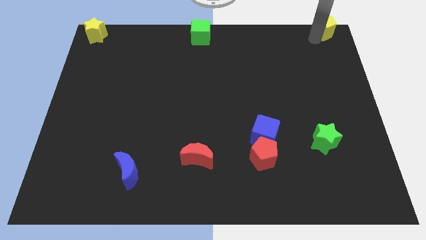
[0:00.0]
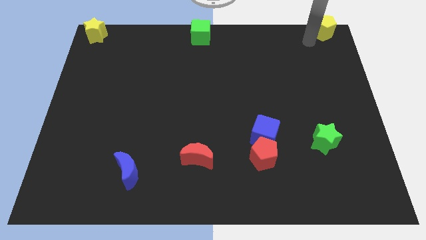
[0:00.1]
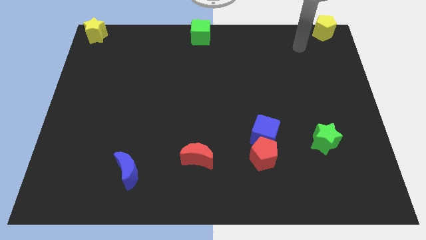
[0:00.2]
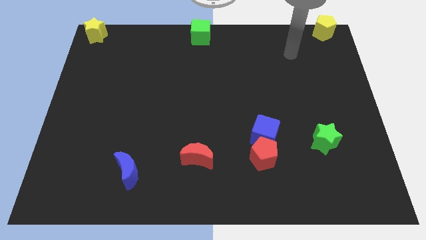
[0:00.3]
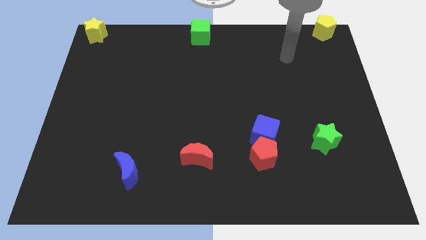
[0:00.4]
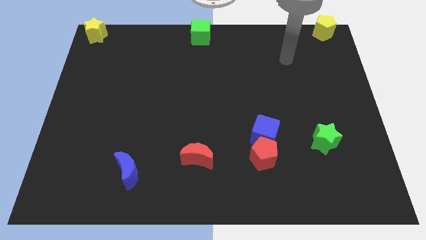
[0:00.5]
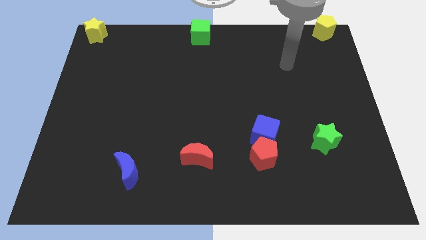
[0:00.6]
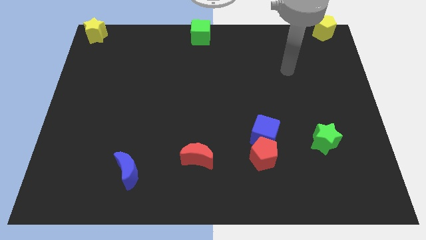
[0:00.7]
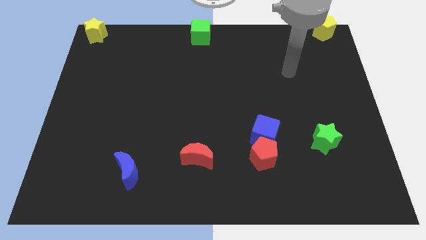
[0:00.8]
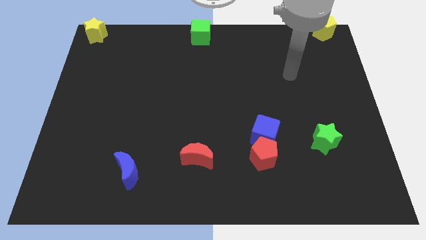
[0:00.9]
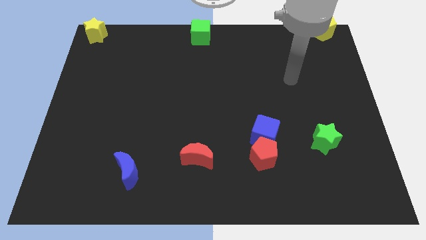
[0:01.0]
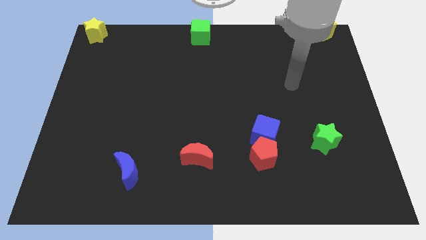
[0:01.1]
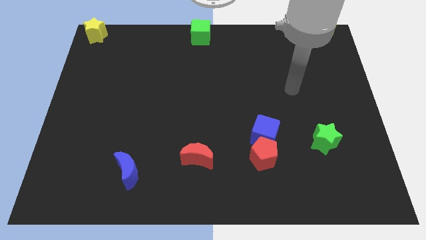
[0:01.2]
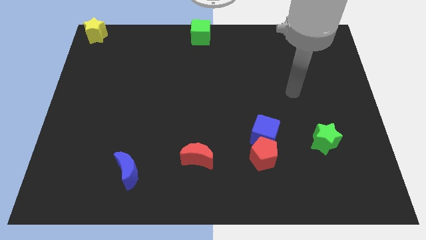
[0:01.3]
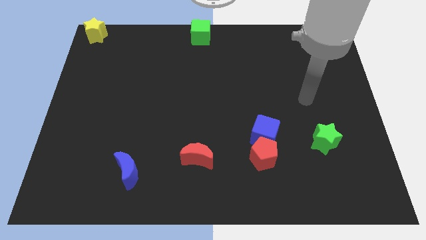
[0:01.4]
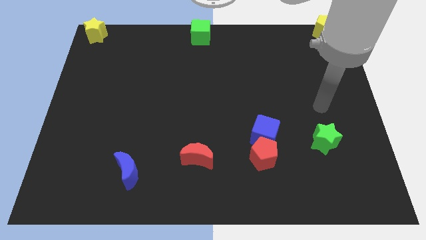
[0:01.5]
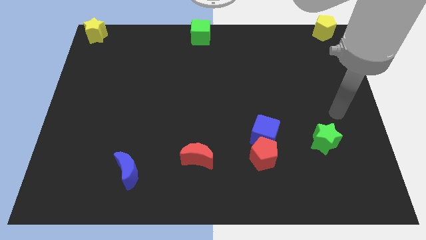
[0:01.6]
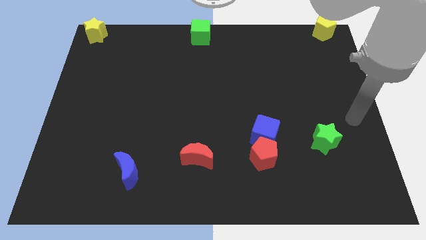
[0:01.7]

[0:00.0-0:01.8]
move your arm away from the yellow pentagon

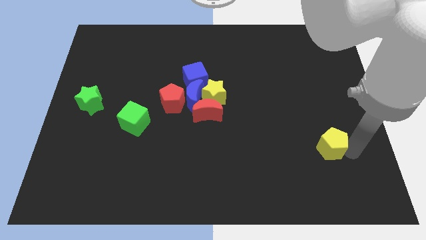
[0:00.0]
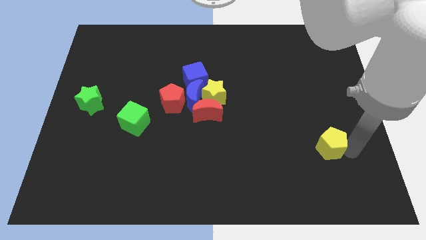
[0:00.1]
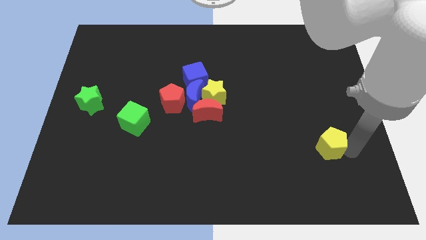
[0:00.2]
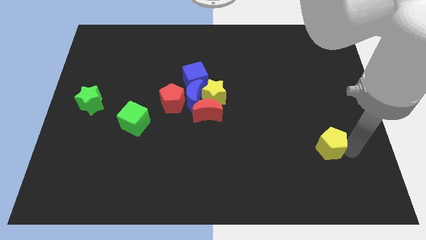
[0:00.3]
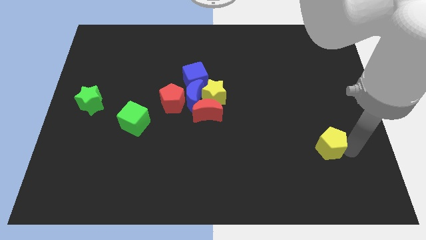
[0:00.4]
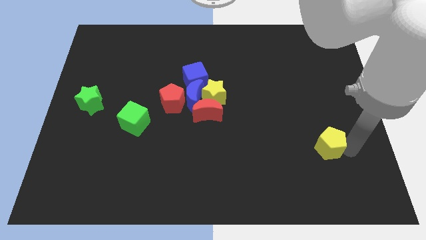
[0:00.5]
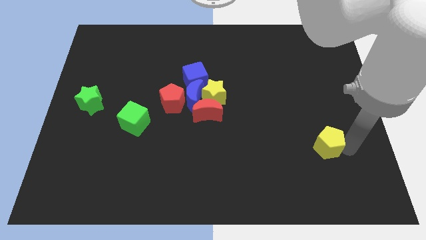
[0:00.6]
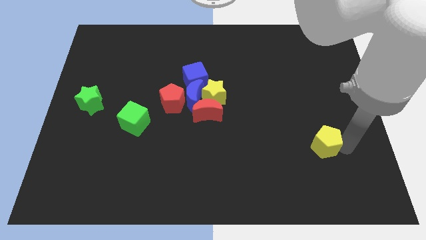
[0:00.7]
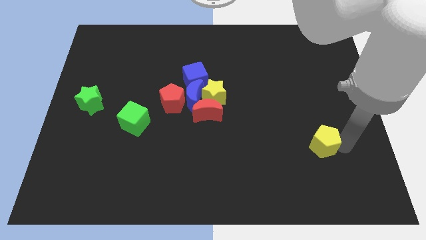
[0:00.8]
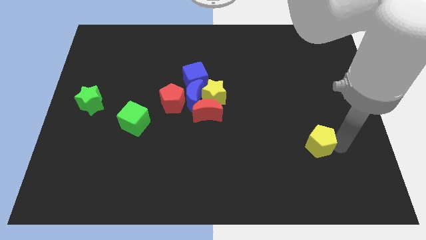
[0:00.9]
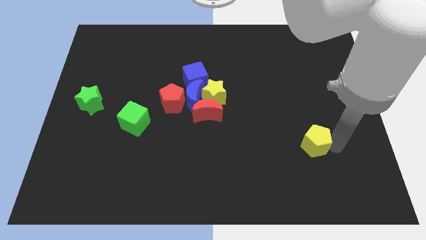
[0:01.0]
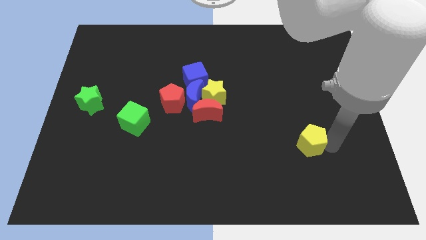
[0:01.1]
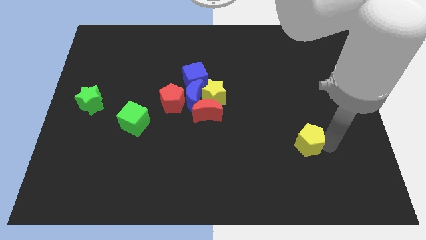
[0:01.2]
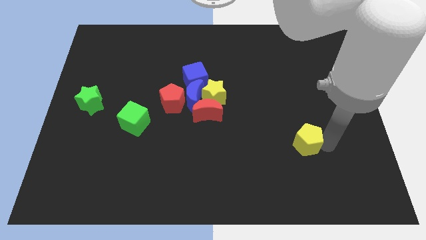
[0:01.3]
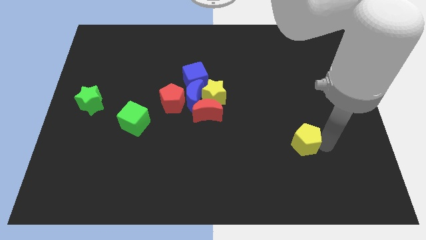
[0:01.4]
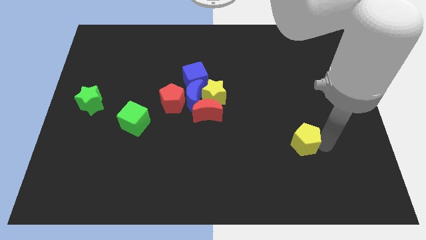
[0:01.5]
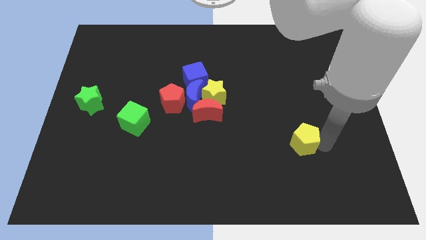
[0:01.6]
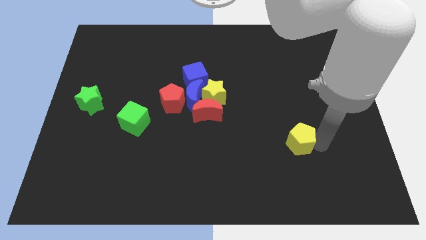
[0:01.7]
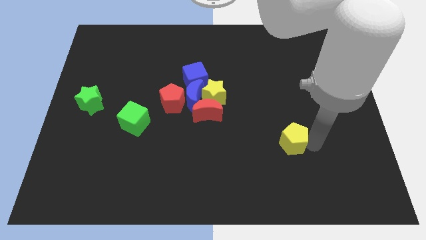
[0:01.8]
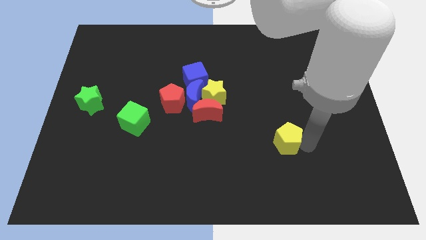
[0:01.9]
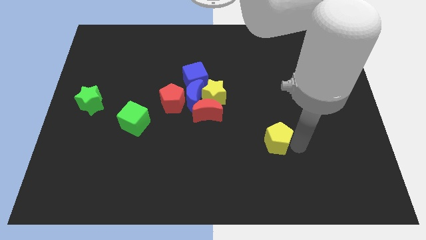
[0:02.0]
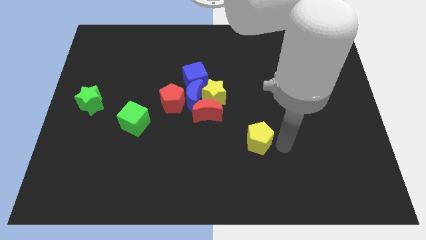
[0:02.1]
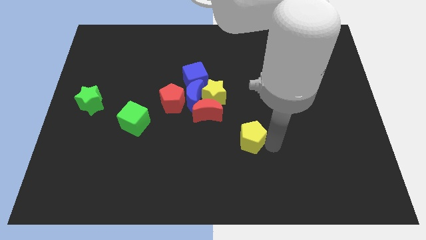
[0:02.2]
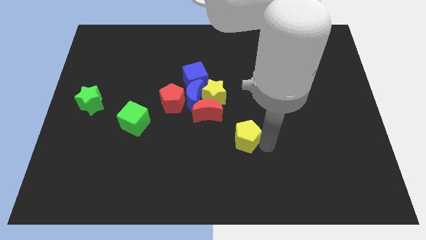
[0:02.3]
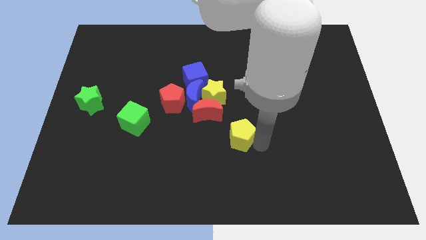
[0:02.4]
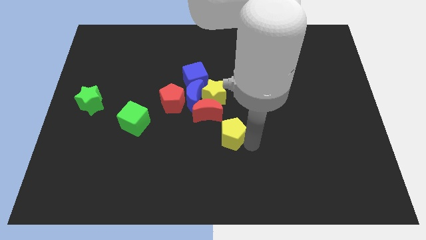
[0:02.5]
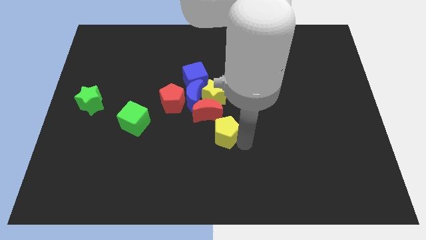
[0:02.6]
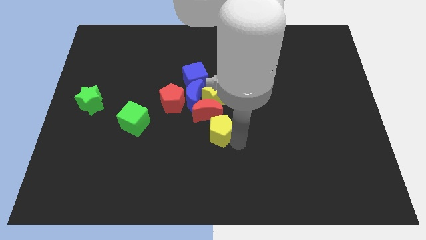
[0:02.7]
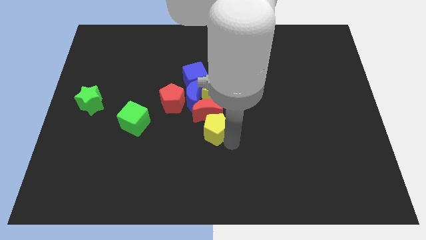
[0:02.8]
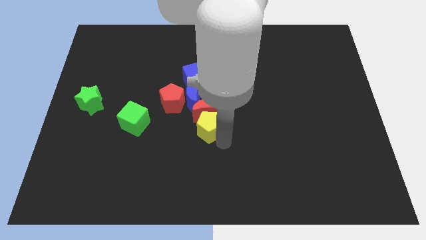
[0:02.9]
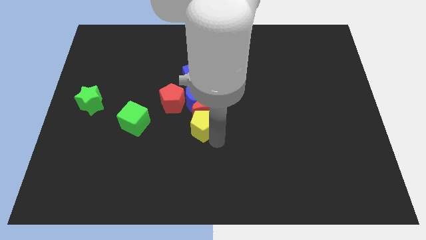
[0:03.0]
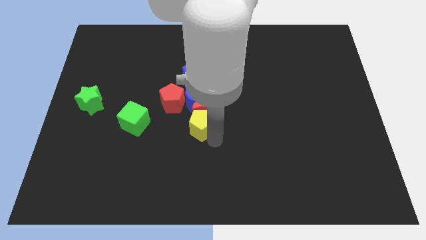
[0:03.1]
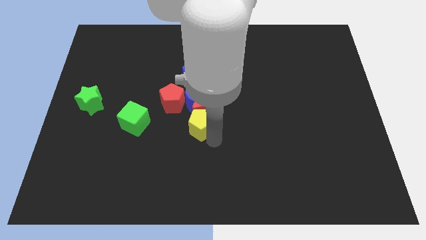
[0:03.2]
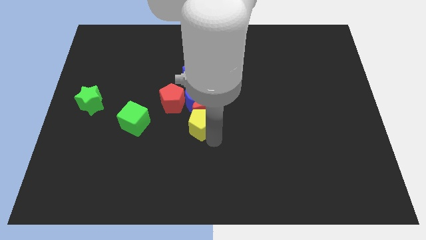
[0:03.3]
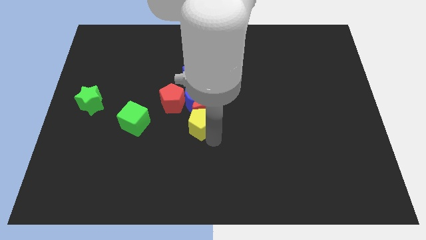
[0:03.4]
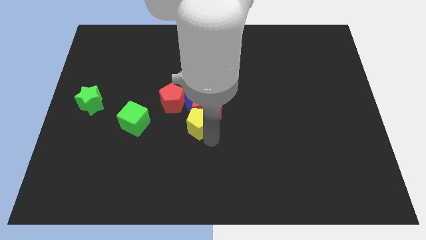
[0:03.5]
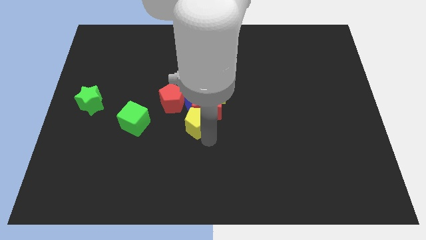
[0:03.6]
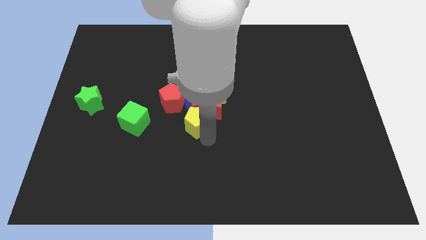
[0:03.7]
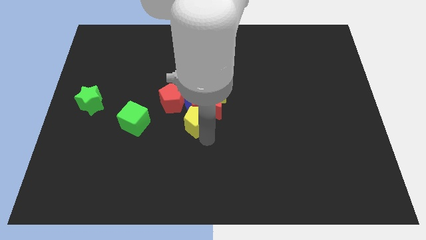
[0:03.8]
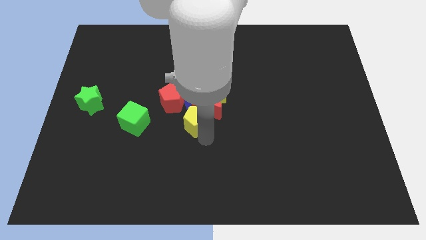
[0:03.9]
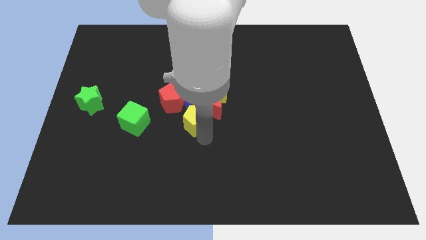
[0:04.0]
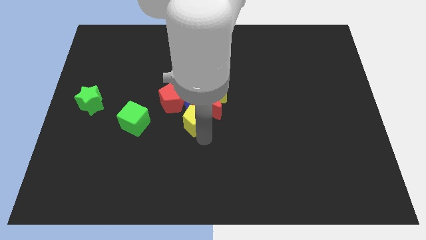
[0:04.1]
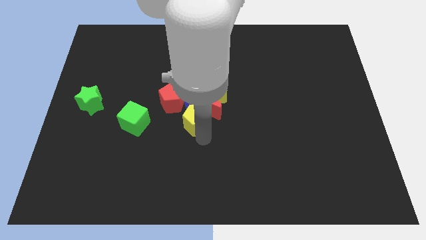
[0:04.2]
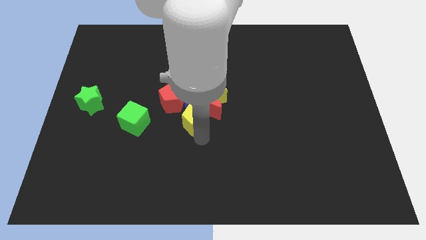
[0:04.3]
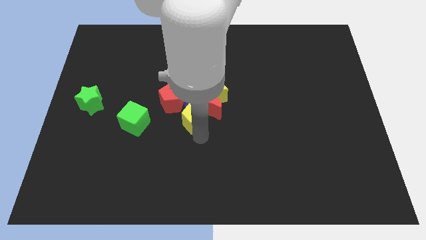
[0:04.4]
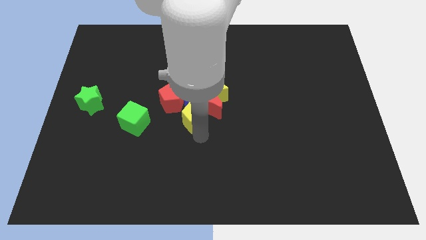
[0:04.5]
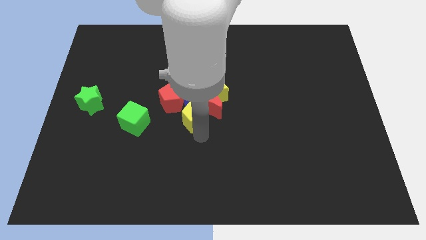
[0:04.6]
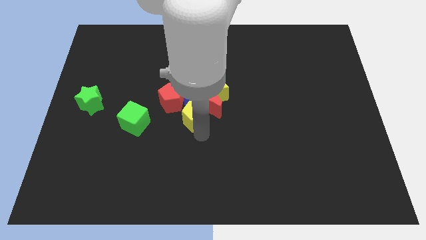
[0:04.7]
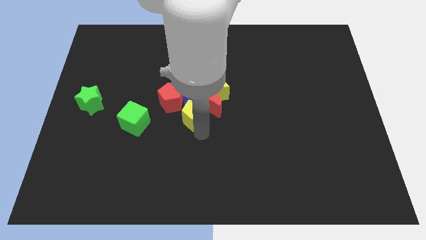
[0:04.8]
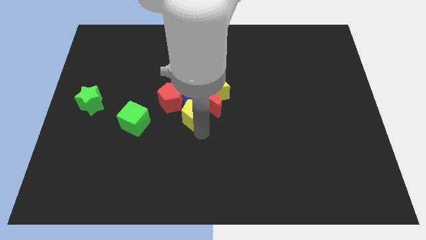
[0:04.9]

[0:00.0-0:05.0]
move the yellow pentagon to the group of blocks

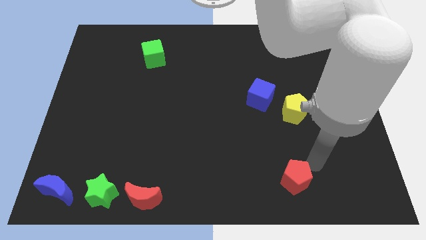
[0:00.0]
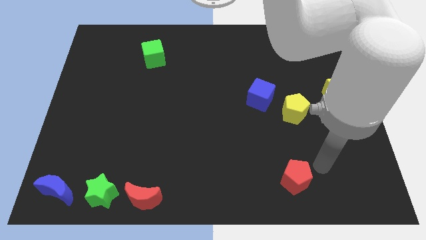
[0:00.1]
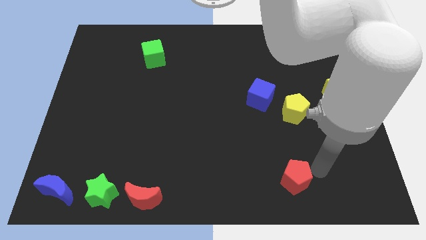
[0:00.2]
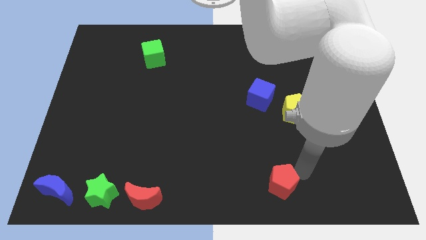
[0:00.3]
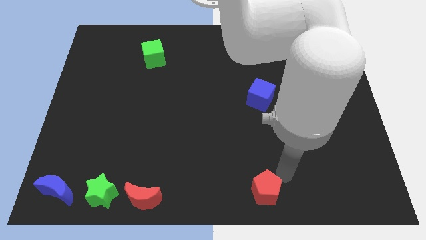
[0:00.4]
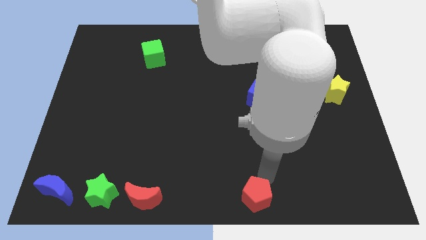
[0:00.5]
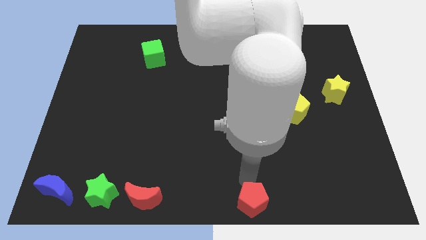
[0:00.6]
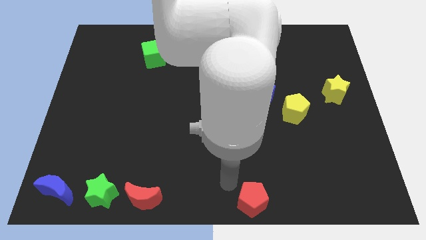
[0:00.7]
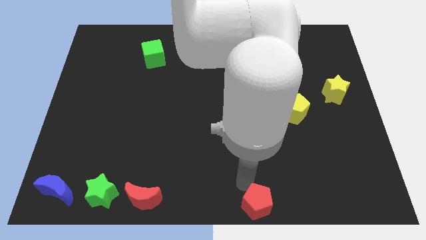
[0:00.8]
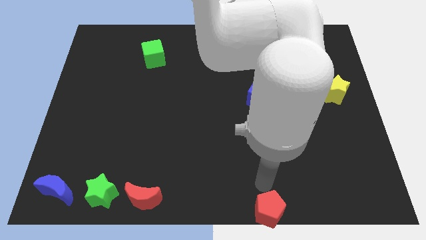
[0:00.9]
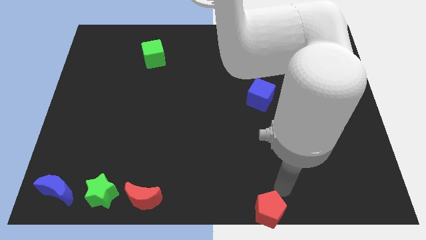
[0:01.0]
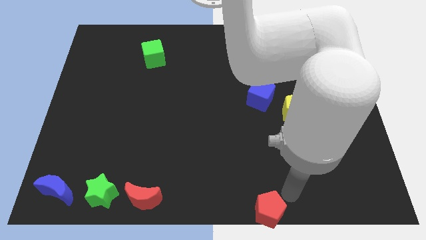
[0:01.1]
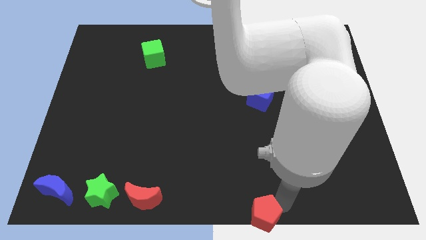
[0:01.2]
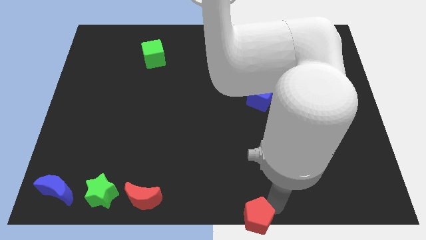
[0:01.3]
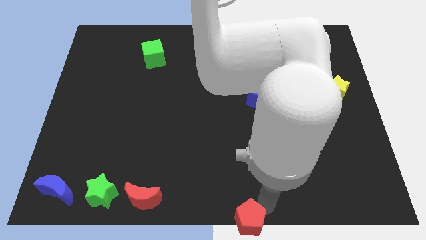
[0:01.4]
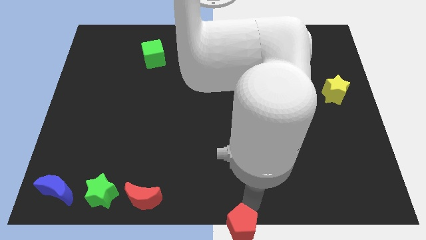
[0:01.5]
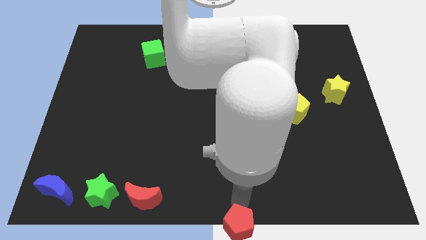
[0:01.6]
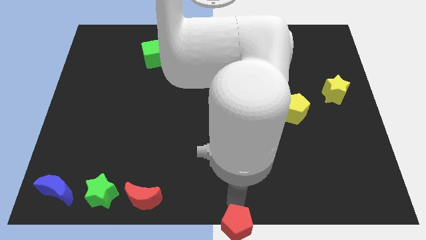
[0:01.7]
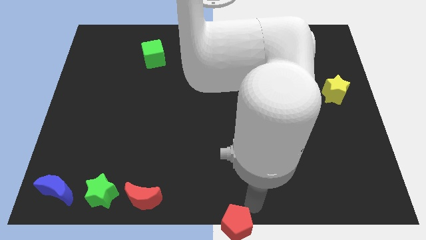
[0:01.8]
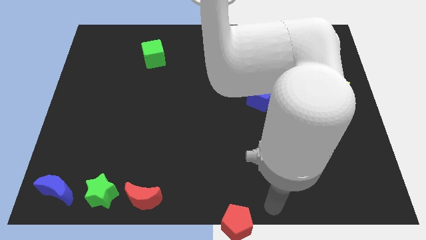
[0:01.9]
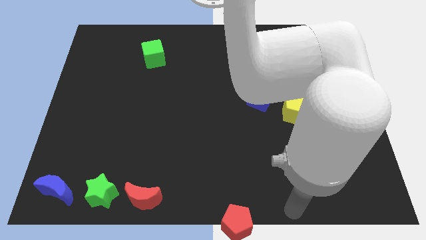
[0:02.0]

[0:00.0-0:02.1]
move the red pentagon to the bottom center of the board

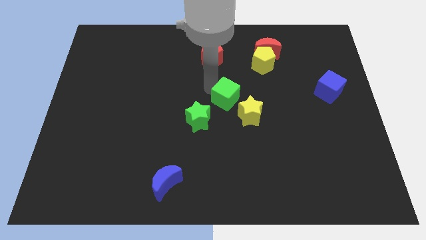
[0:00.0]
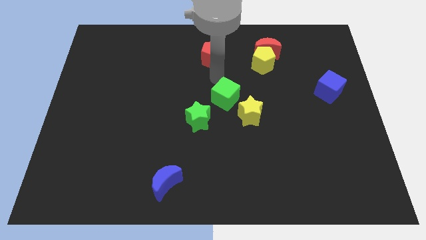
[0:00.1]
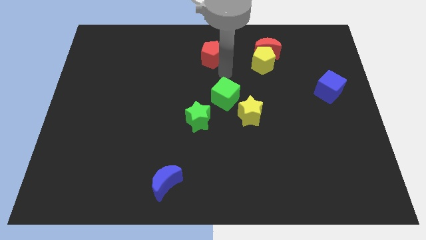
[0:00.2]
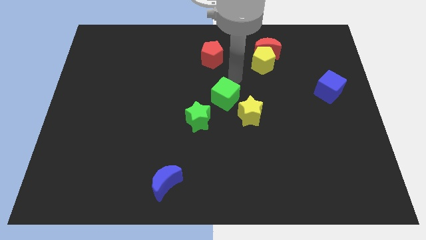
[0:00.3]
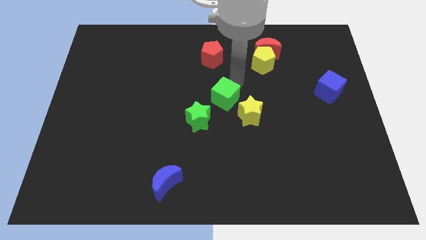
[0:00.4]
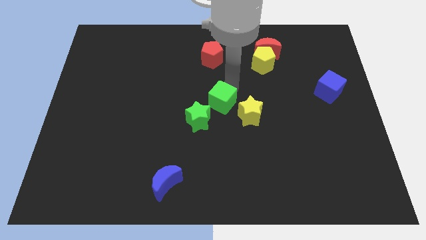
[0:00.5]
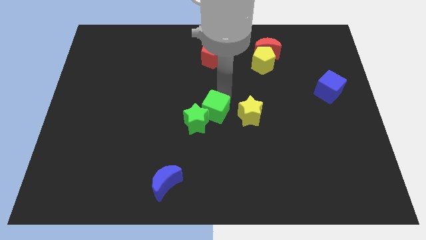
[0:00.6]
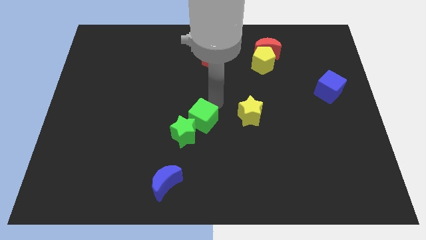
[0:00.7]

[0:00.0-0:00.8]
push green cube below red pentagon
